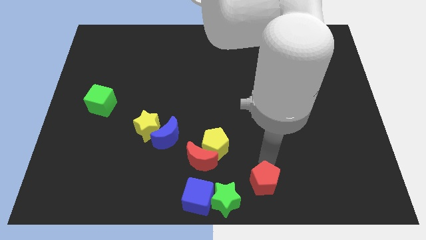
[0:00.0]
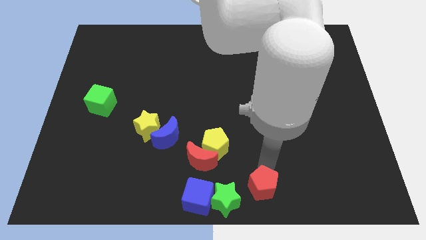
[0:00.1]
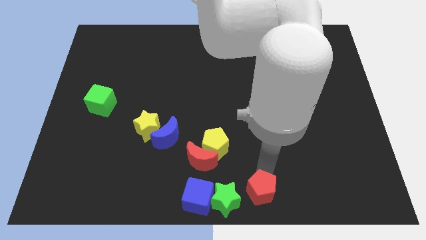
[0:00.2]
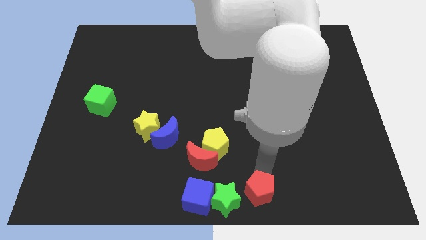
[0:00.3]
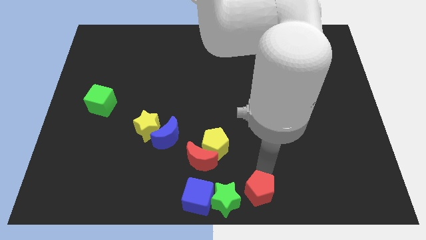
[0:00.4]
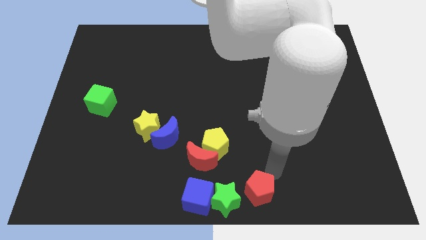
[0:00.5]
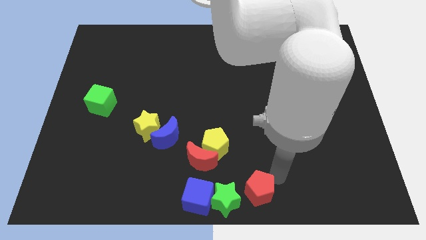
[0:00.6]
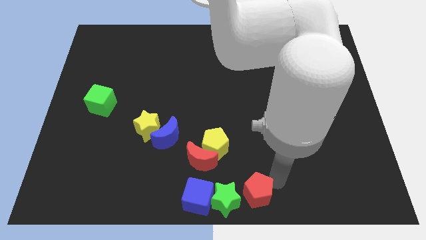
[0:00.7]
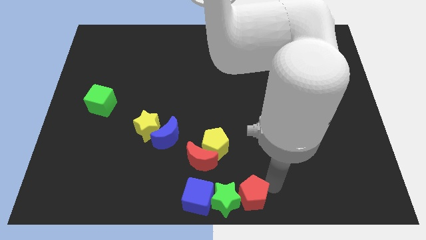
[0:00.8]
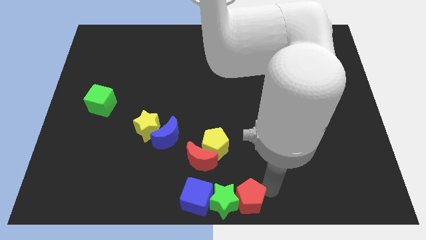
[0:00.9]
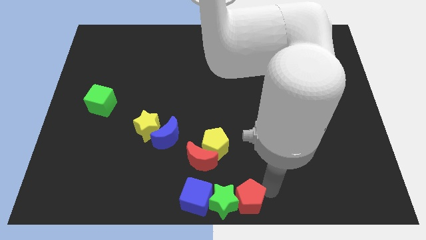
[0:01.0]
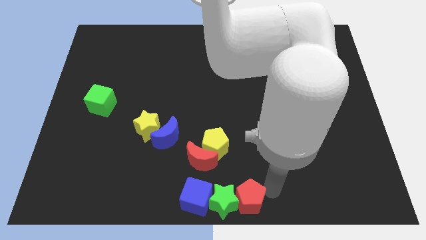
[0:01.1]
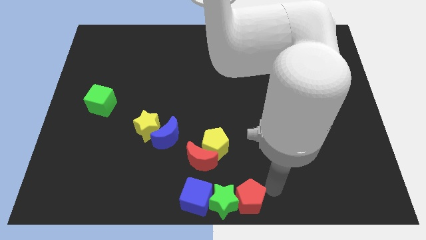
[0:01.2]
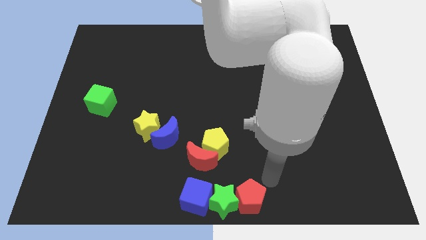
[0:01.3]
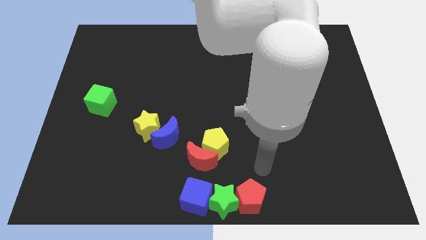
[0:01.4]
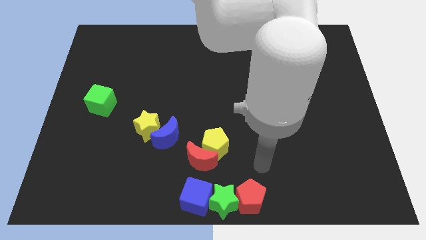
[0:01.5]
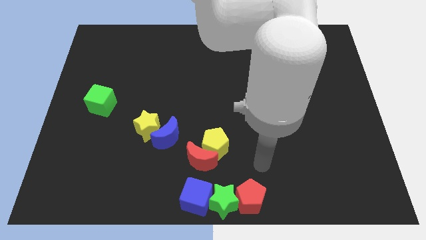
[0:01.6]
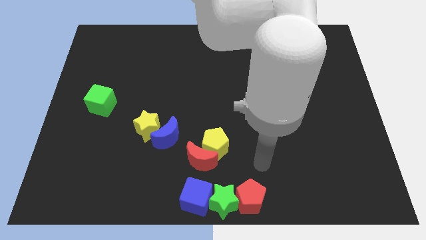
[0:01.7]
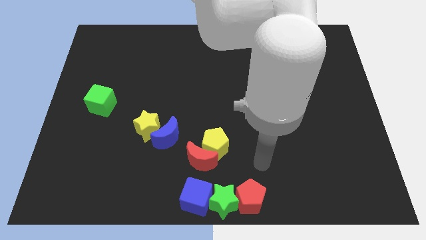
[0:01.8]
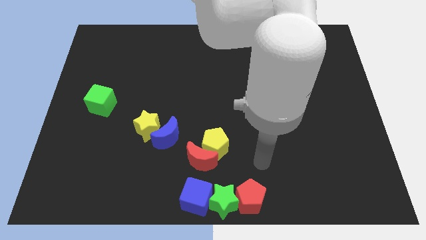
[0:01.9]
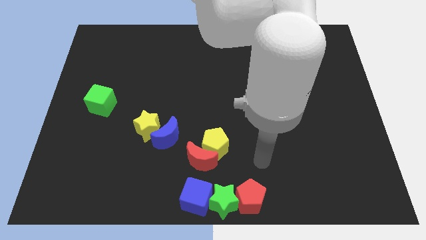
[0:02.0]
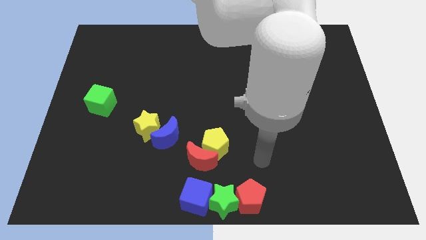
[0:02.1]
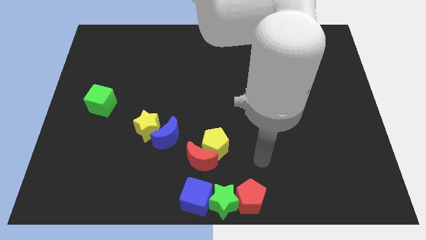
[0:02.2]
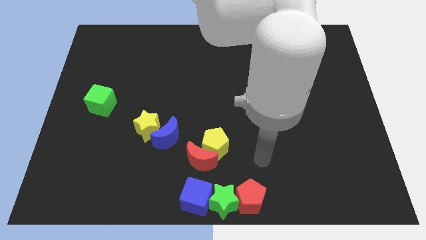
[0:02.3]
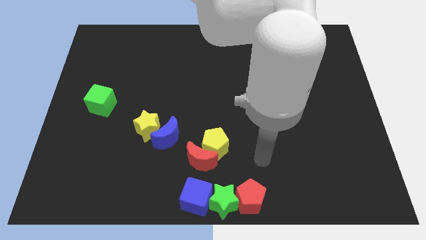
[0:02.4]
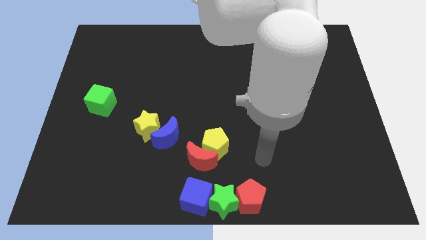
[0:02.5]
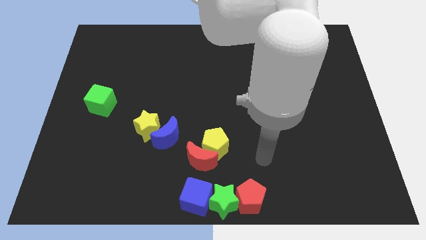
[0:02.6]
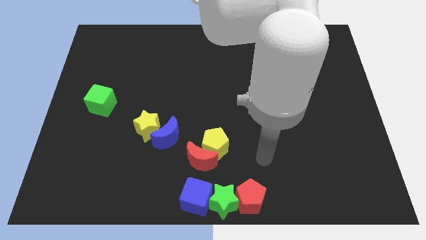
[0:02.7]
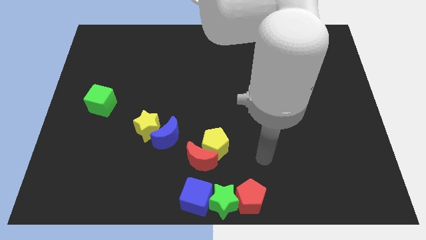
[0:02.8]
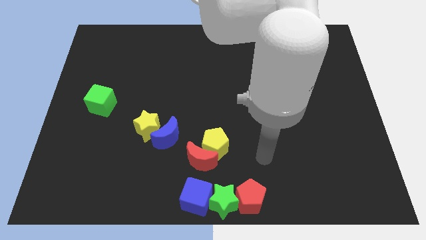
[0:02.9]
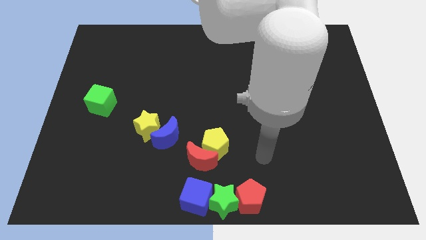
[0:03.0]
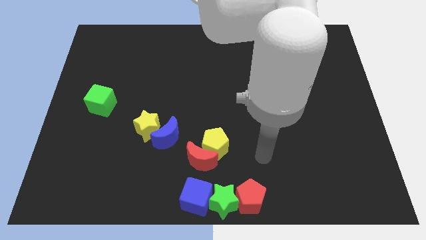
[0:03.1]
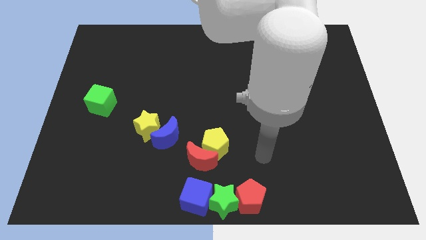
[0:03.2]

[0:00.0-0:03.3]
place the red pentagon towards the right side of the green star

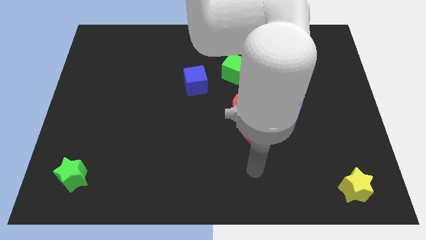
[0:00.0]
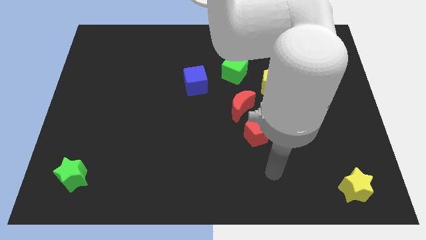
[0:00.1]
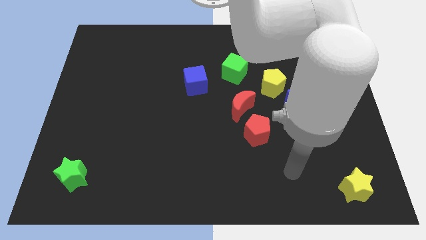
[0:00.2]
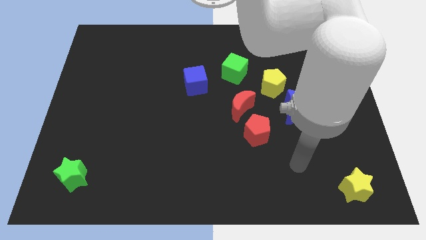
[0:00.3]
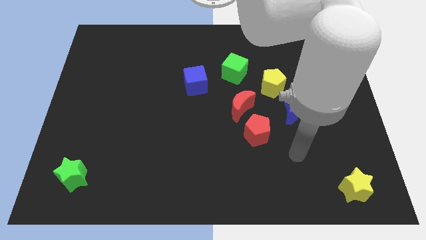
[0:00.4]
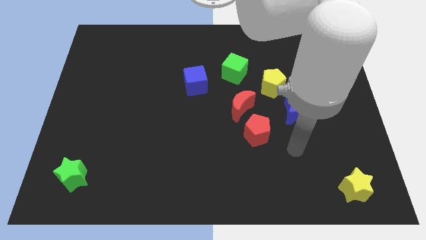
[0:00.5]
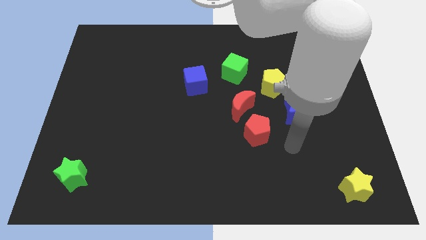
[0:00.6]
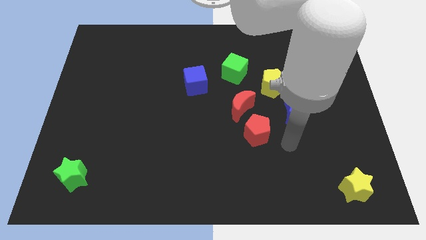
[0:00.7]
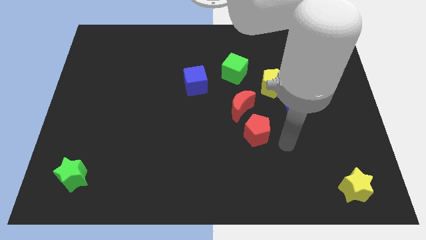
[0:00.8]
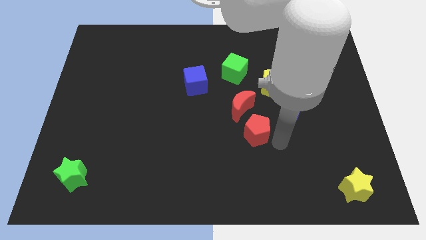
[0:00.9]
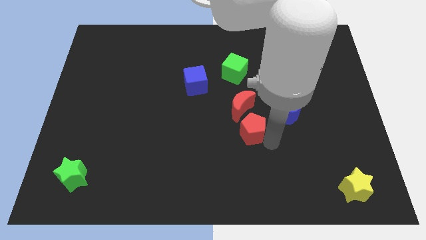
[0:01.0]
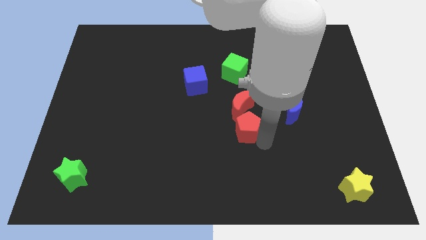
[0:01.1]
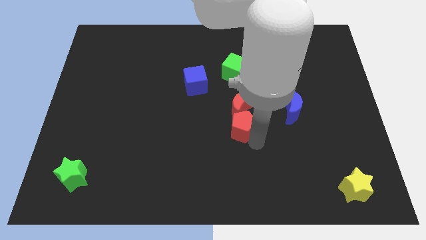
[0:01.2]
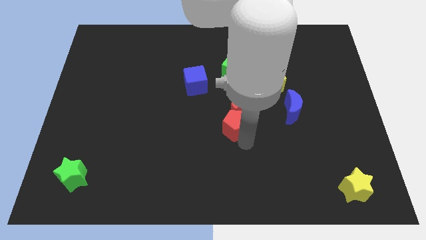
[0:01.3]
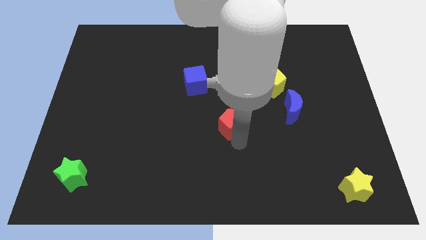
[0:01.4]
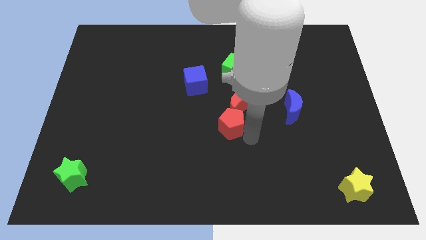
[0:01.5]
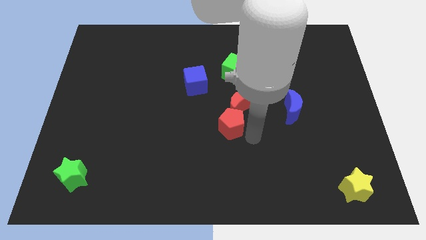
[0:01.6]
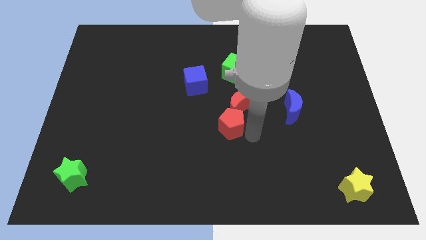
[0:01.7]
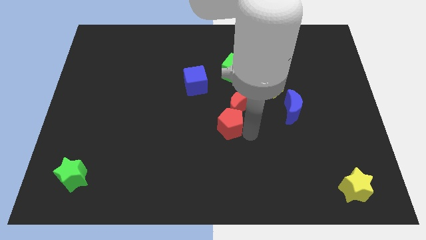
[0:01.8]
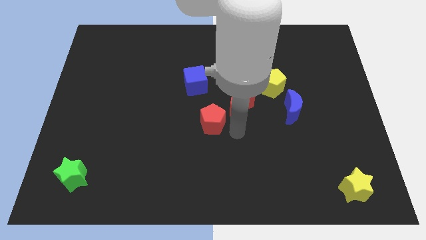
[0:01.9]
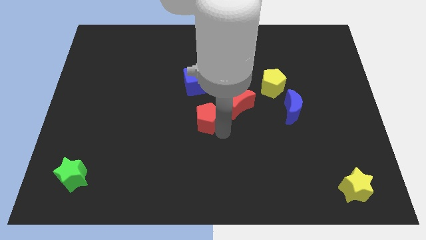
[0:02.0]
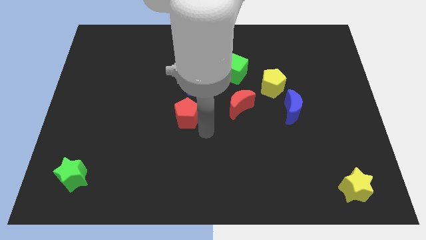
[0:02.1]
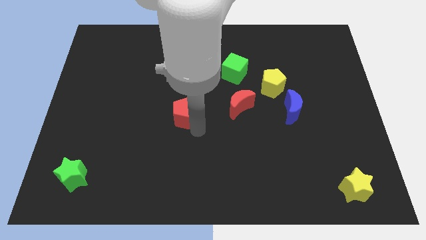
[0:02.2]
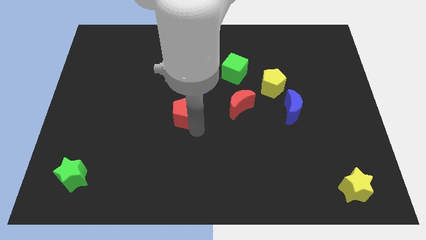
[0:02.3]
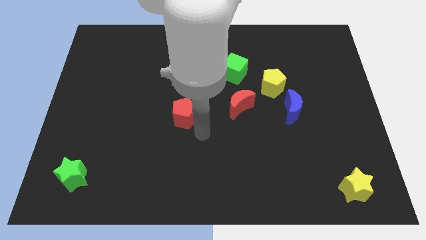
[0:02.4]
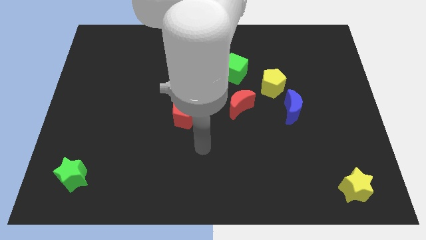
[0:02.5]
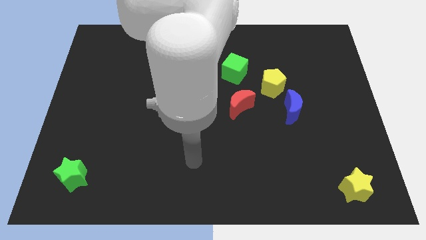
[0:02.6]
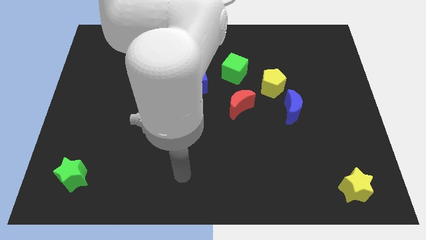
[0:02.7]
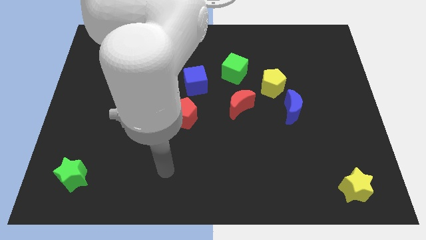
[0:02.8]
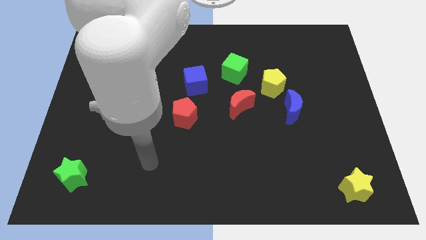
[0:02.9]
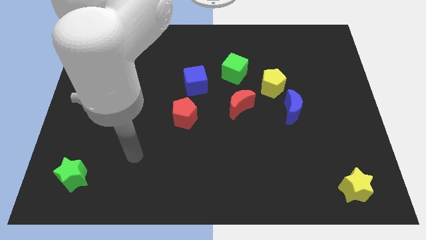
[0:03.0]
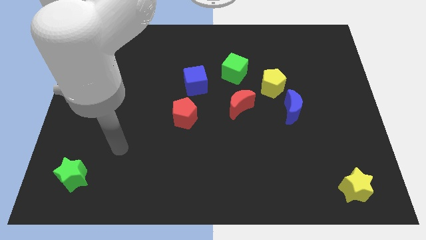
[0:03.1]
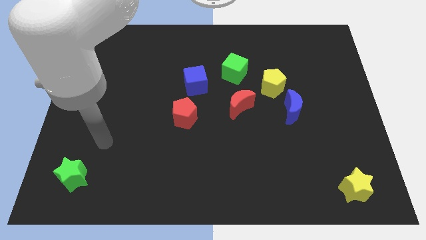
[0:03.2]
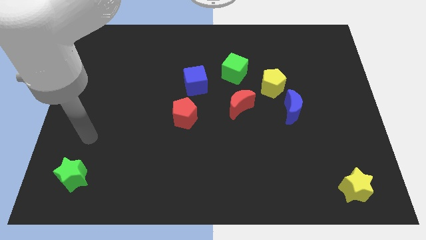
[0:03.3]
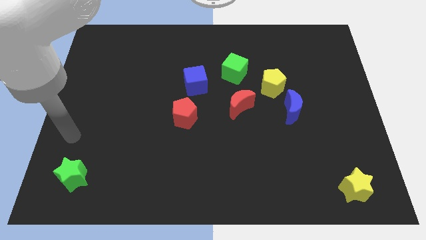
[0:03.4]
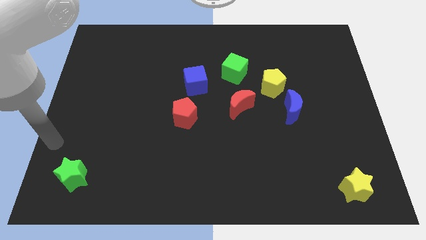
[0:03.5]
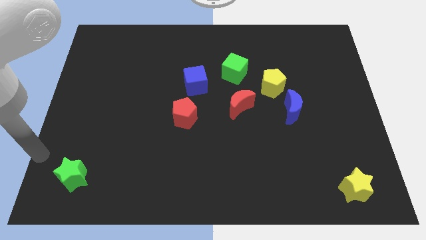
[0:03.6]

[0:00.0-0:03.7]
move the red pentagon below to the blue cube

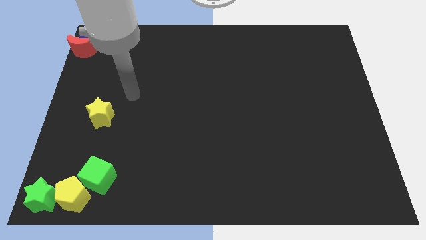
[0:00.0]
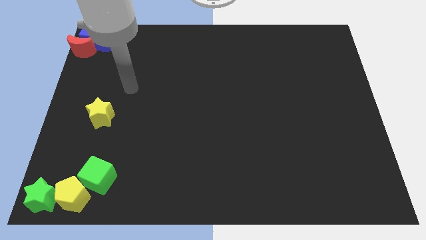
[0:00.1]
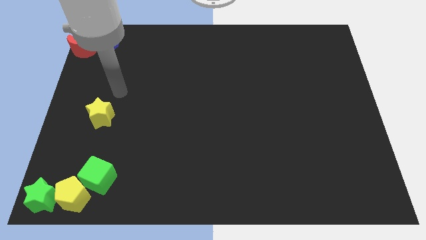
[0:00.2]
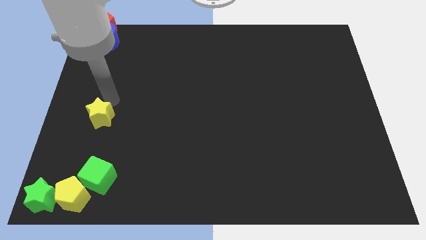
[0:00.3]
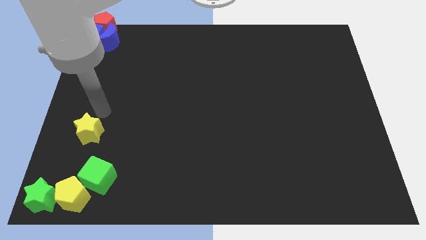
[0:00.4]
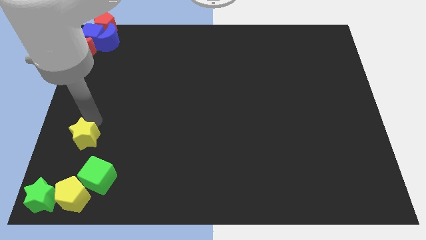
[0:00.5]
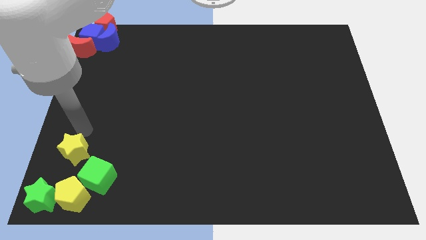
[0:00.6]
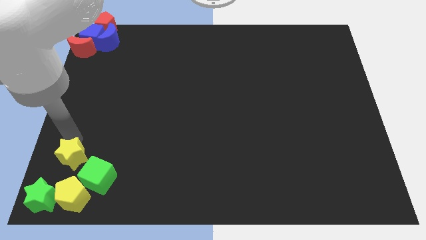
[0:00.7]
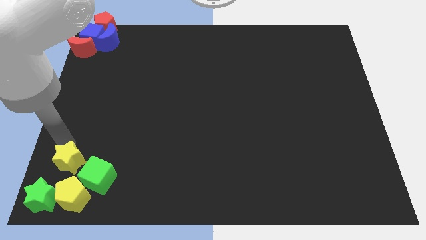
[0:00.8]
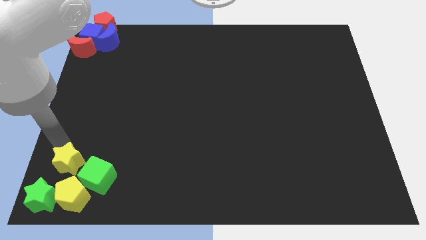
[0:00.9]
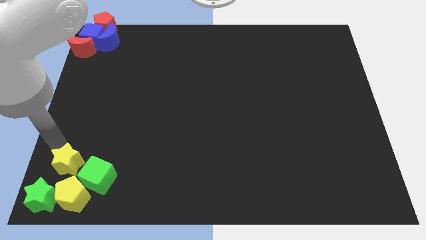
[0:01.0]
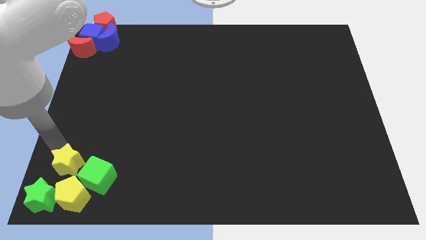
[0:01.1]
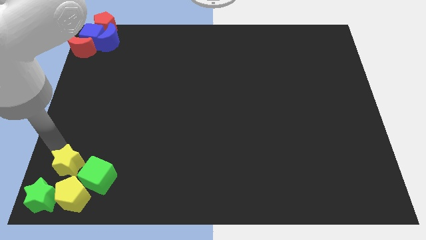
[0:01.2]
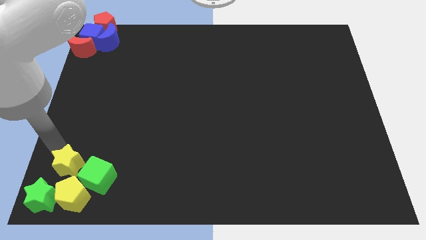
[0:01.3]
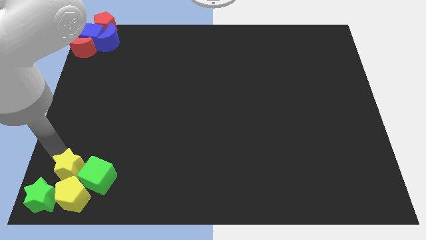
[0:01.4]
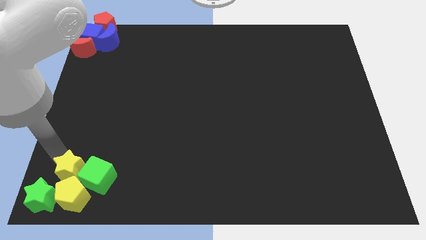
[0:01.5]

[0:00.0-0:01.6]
push the yellow star close to the green blocks and the yellow pentagon

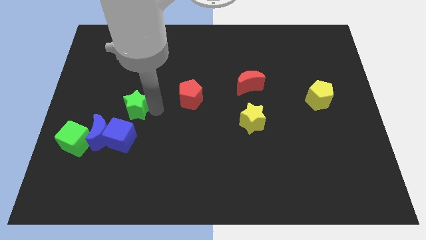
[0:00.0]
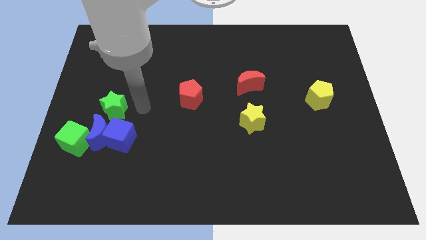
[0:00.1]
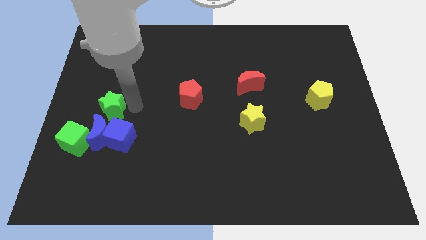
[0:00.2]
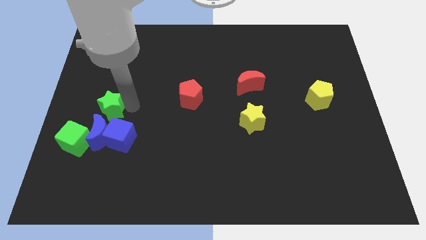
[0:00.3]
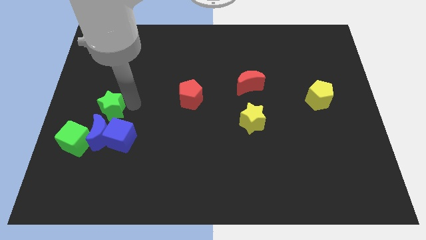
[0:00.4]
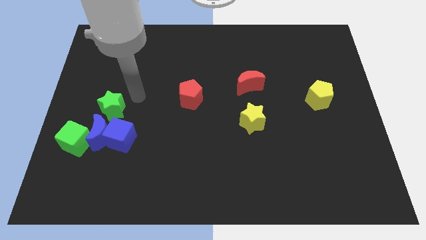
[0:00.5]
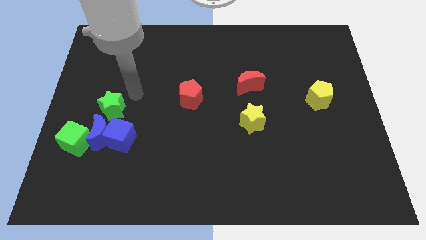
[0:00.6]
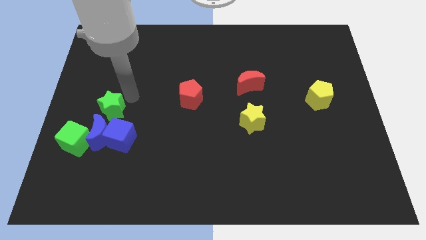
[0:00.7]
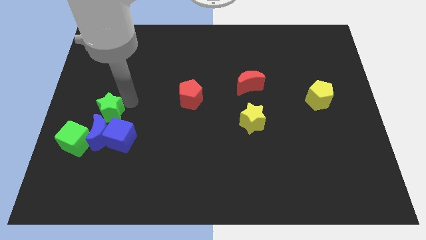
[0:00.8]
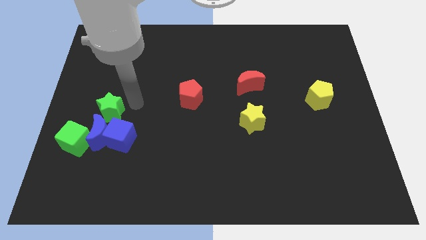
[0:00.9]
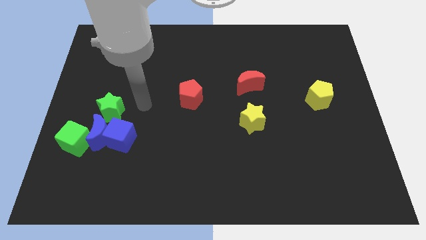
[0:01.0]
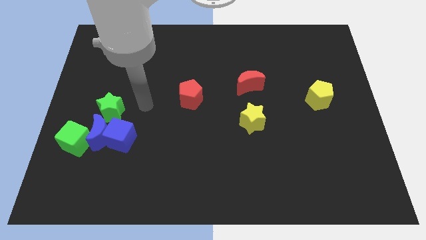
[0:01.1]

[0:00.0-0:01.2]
place the green star to the top of blue cube and blue crescent
